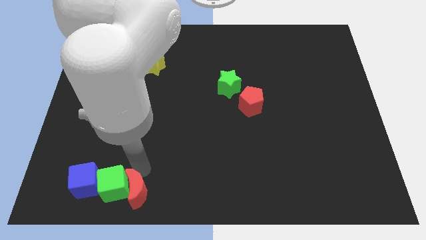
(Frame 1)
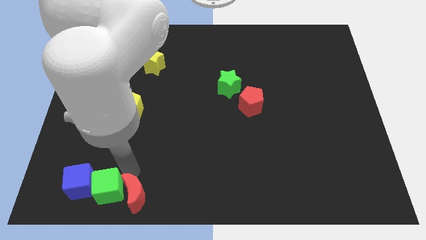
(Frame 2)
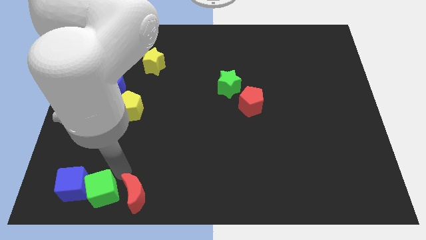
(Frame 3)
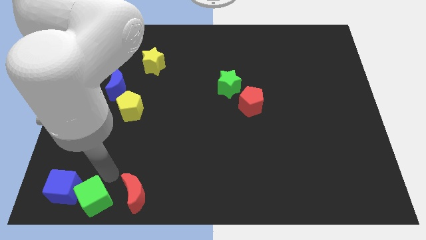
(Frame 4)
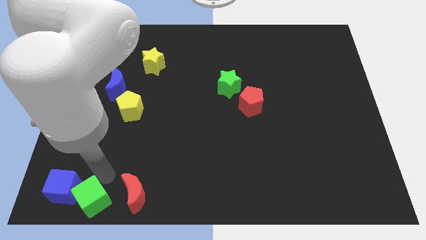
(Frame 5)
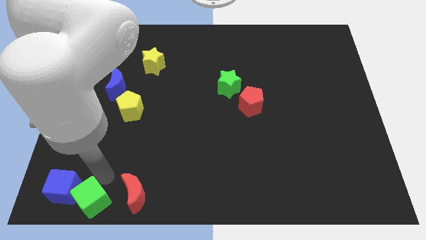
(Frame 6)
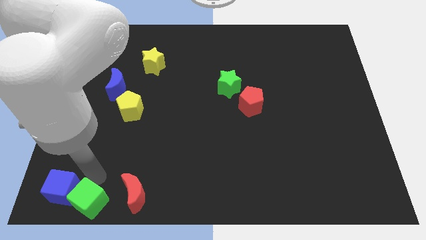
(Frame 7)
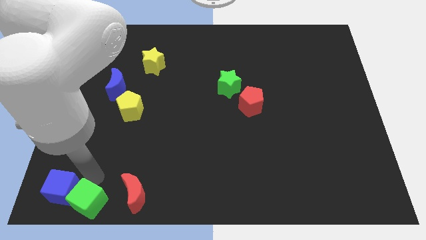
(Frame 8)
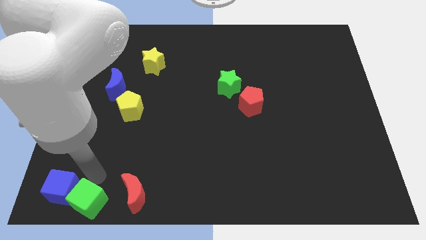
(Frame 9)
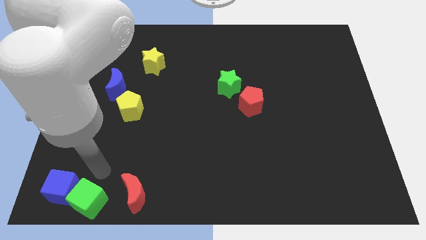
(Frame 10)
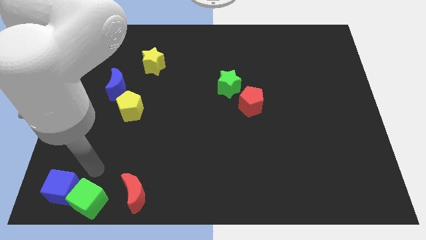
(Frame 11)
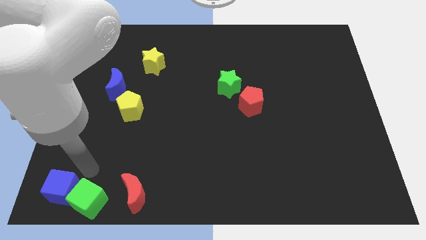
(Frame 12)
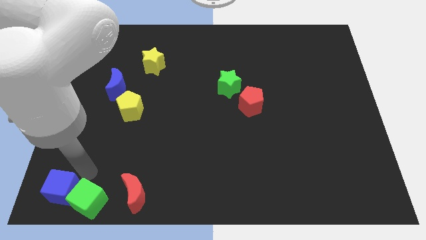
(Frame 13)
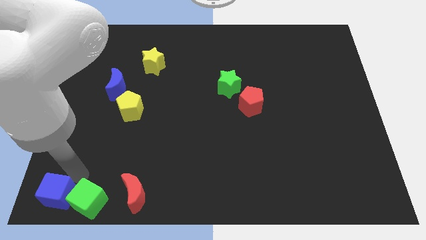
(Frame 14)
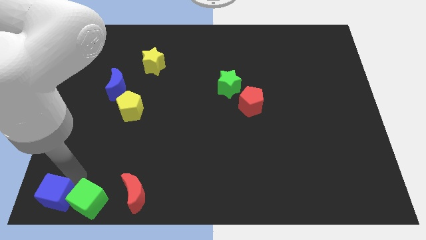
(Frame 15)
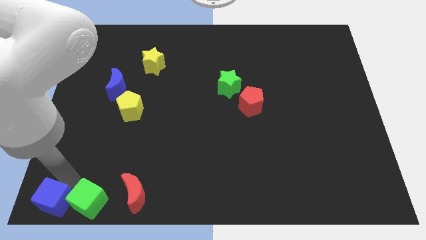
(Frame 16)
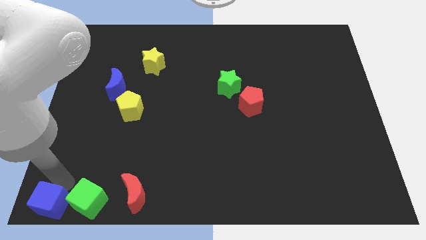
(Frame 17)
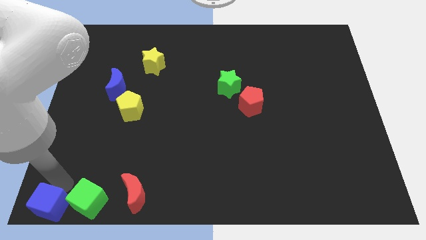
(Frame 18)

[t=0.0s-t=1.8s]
separate green and the blue cube from the red crescent

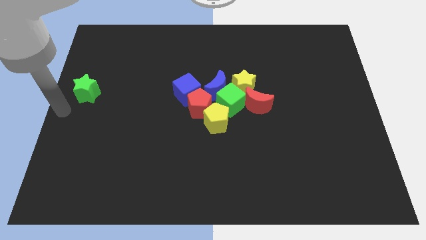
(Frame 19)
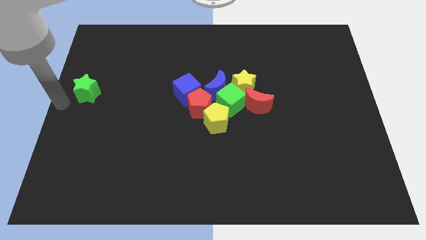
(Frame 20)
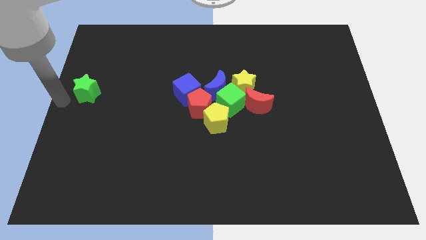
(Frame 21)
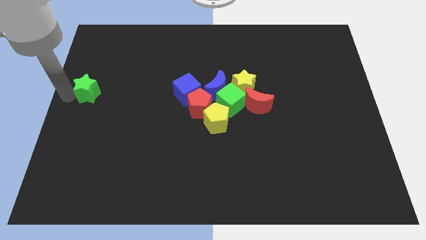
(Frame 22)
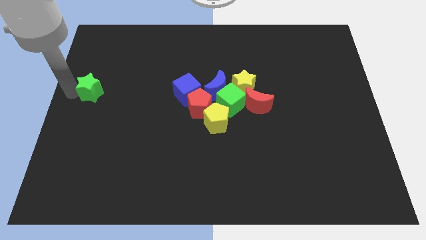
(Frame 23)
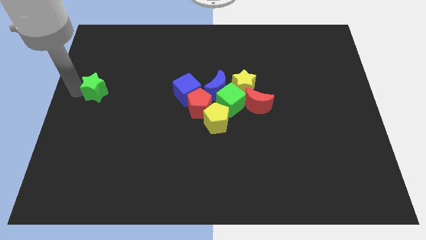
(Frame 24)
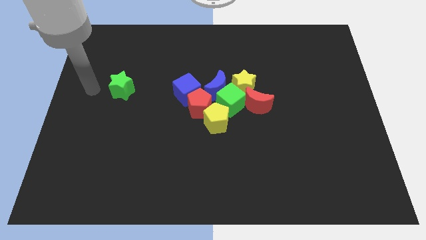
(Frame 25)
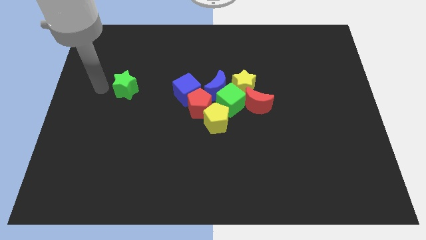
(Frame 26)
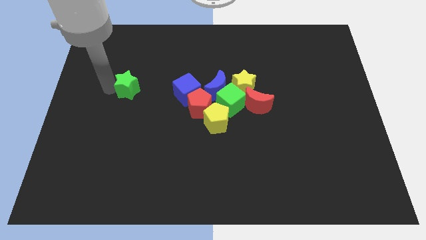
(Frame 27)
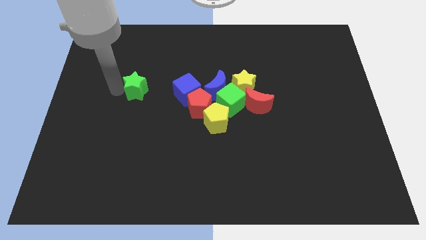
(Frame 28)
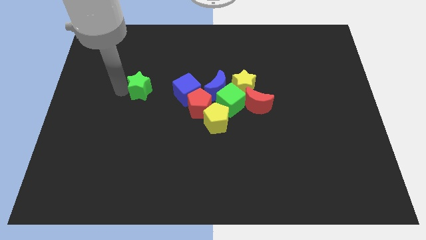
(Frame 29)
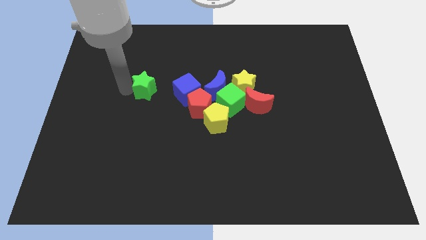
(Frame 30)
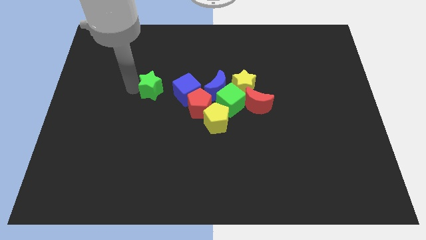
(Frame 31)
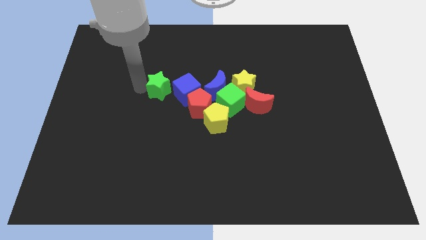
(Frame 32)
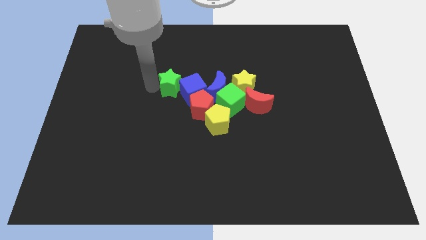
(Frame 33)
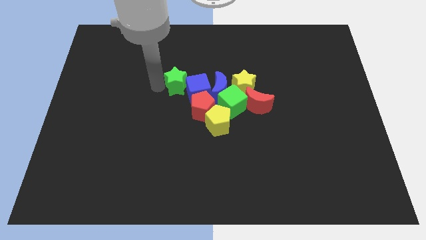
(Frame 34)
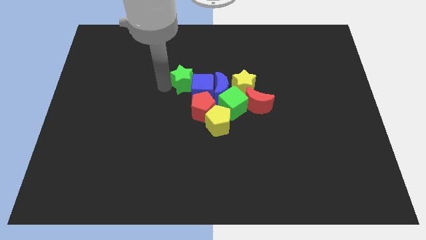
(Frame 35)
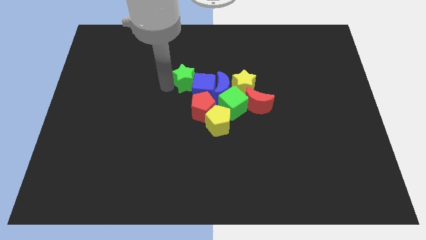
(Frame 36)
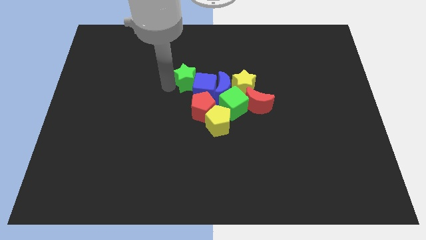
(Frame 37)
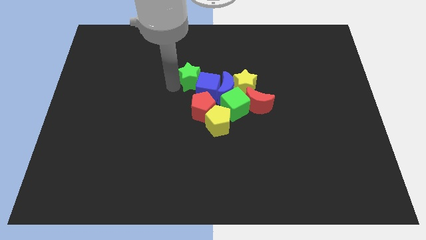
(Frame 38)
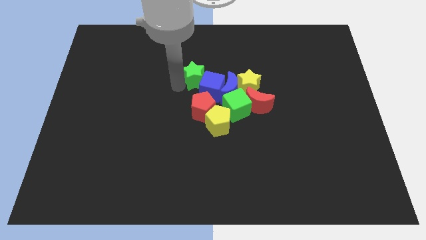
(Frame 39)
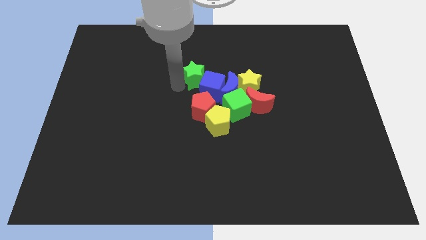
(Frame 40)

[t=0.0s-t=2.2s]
push green star into blue cube

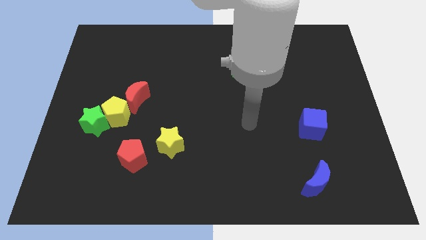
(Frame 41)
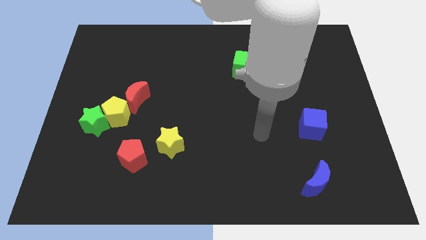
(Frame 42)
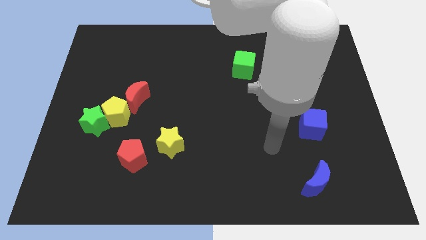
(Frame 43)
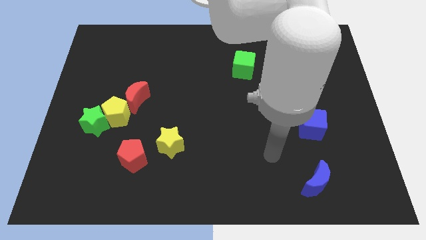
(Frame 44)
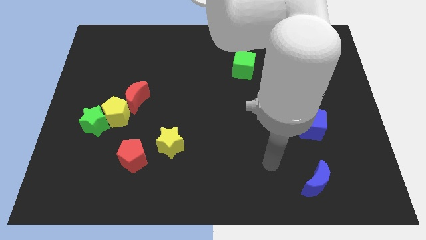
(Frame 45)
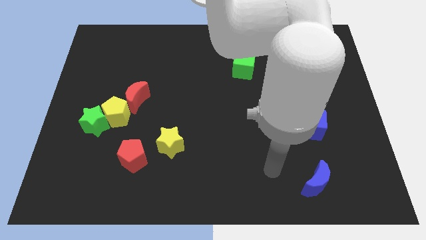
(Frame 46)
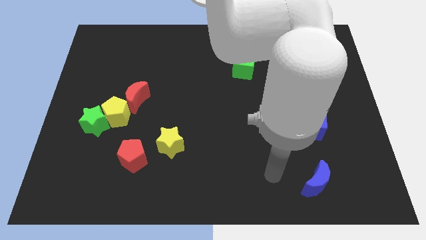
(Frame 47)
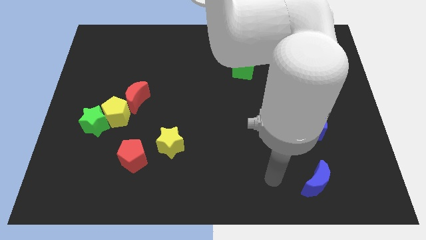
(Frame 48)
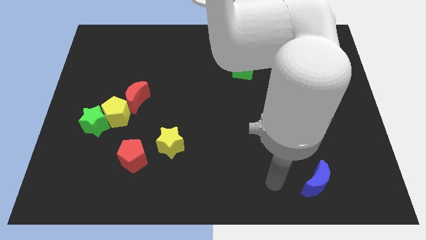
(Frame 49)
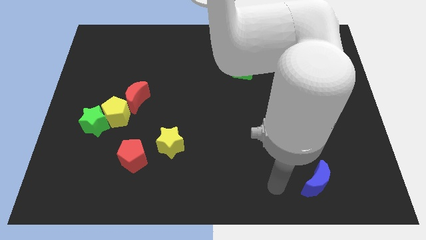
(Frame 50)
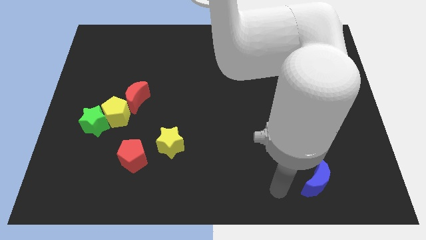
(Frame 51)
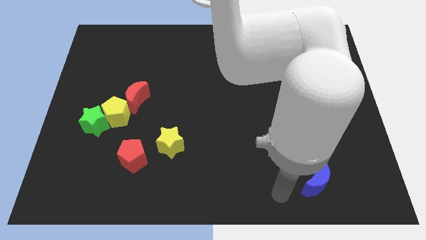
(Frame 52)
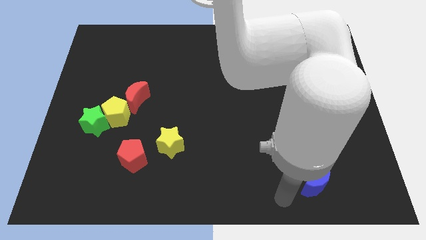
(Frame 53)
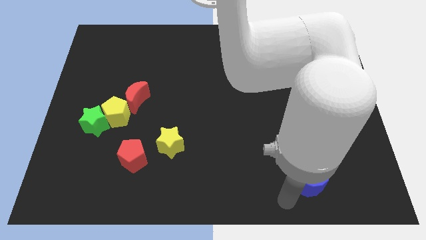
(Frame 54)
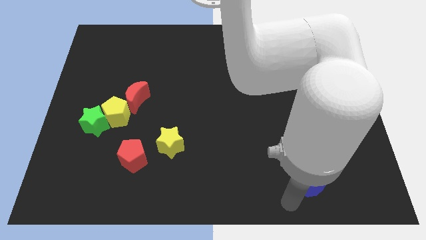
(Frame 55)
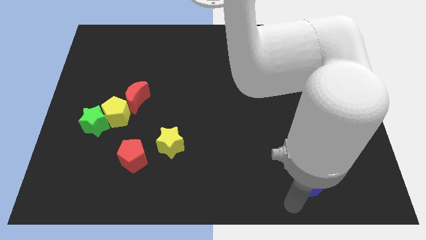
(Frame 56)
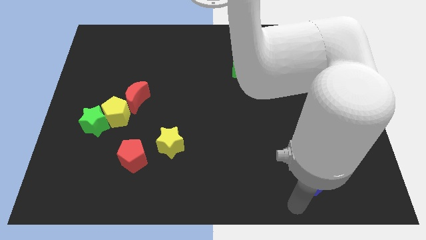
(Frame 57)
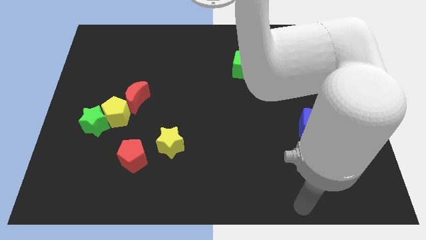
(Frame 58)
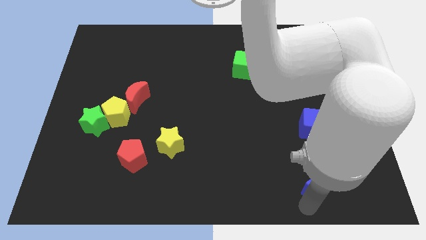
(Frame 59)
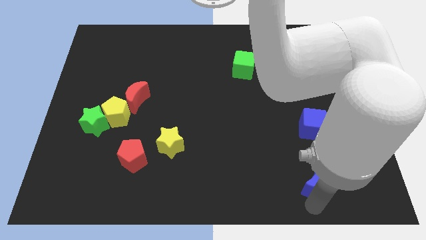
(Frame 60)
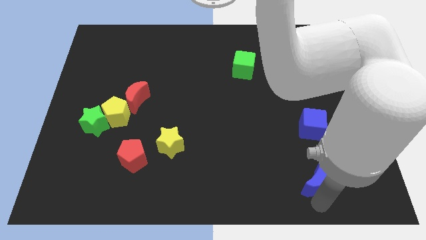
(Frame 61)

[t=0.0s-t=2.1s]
move your arm to the bottom of the blue crescent

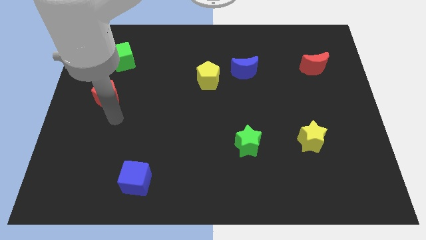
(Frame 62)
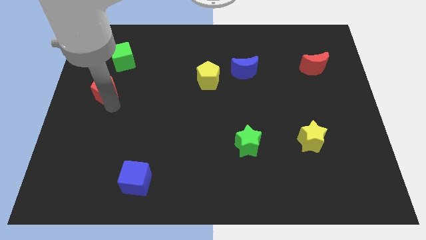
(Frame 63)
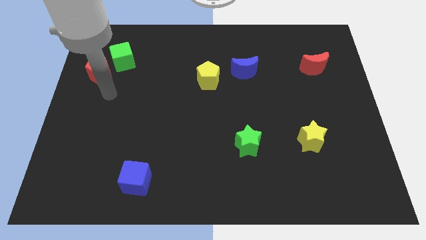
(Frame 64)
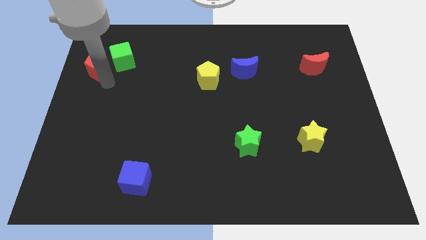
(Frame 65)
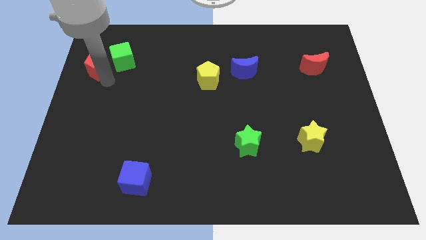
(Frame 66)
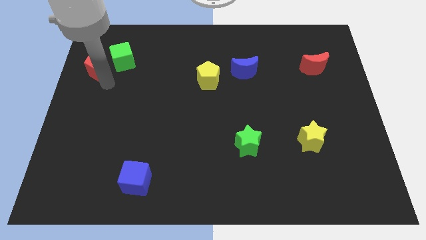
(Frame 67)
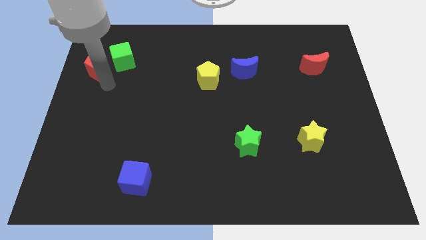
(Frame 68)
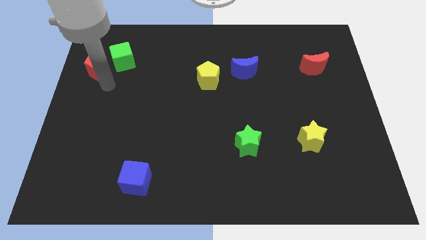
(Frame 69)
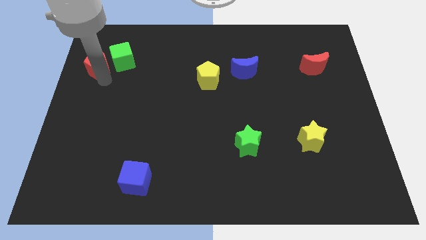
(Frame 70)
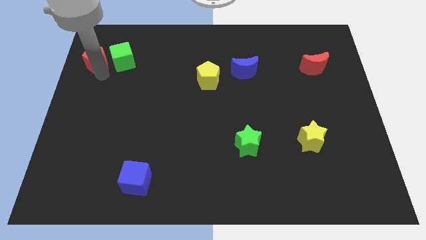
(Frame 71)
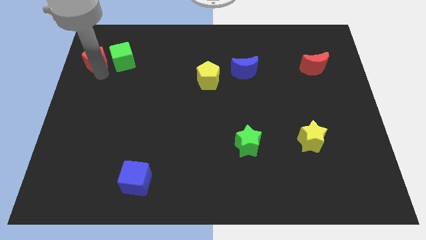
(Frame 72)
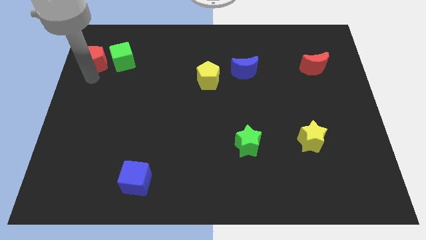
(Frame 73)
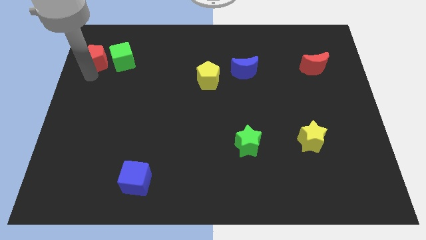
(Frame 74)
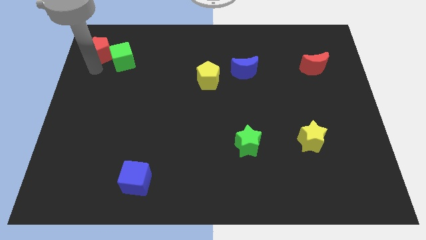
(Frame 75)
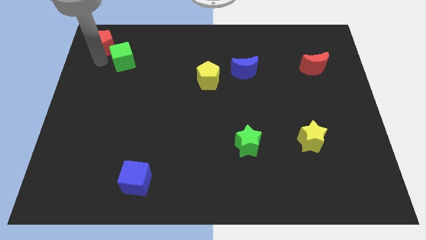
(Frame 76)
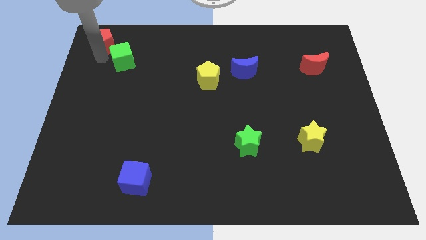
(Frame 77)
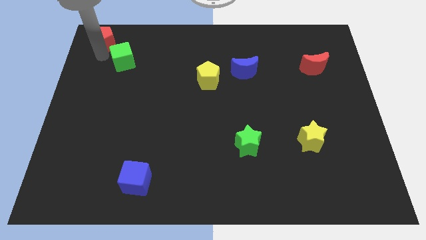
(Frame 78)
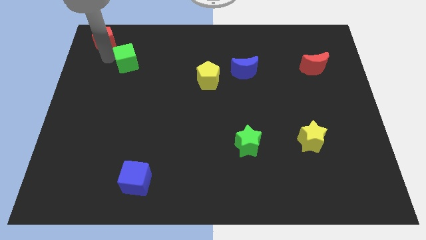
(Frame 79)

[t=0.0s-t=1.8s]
put the red block diagonally to the top left of the green cube

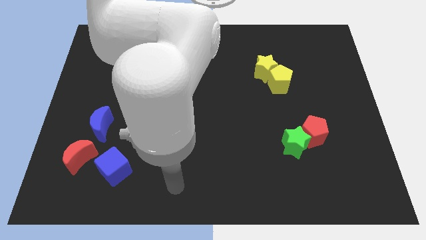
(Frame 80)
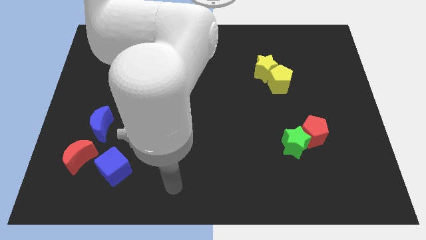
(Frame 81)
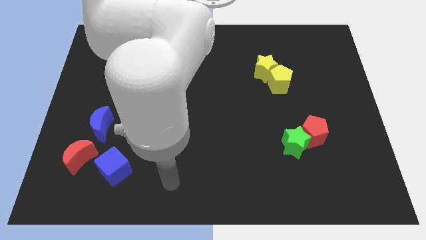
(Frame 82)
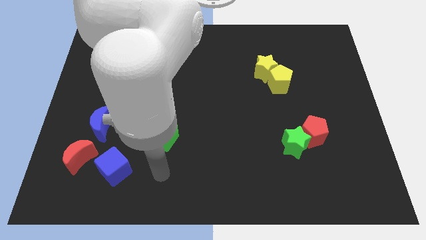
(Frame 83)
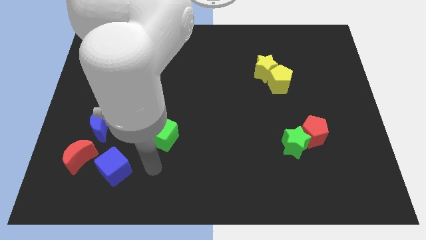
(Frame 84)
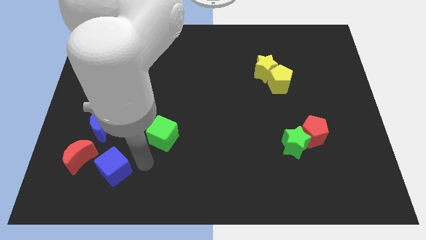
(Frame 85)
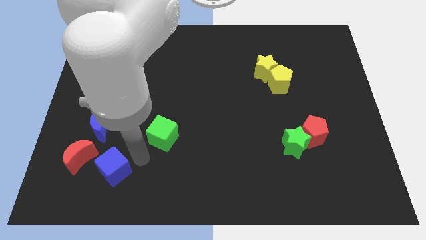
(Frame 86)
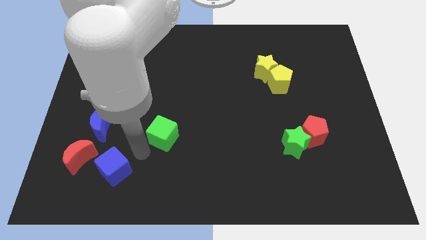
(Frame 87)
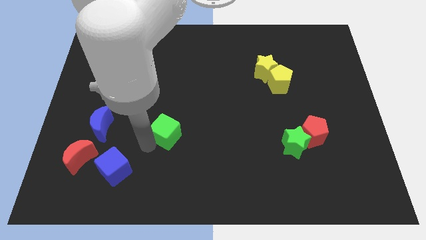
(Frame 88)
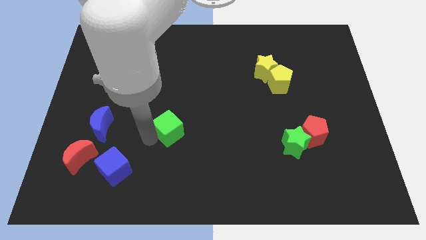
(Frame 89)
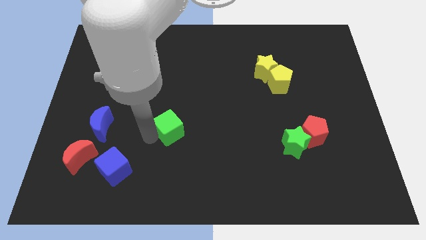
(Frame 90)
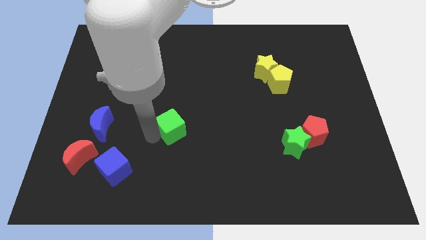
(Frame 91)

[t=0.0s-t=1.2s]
touch the bottom of green cube
